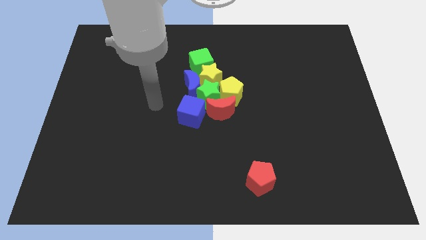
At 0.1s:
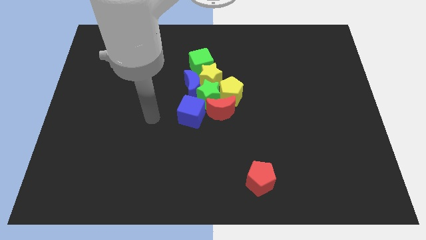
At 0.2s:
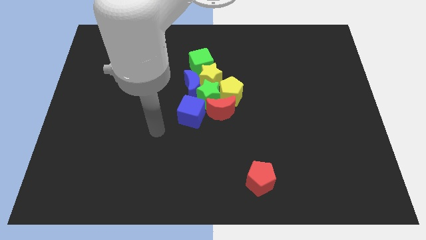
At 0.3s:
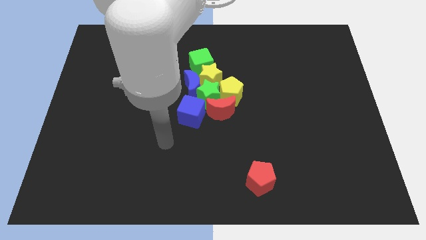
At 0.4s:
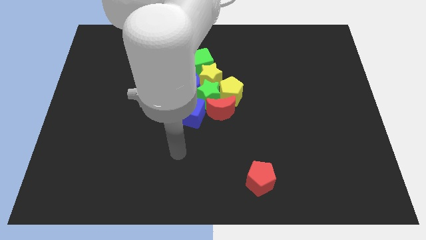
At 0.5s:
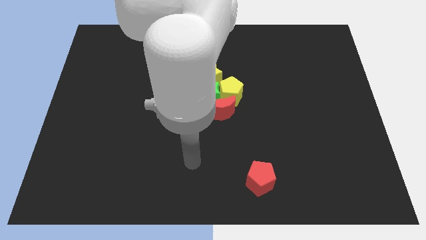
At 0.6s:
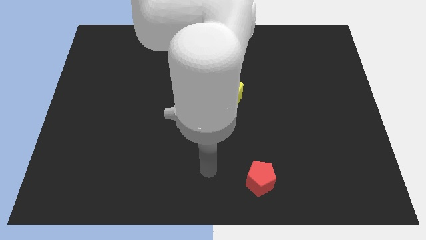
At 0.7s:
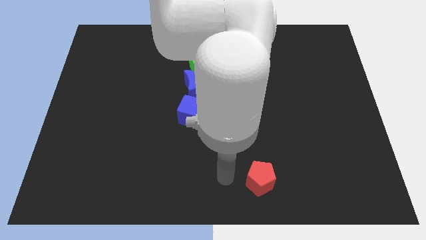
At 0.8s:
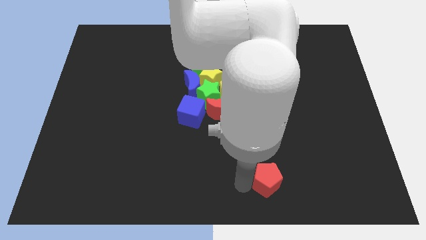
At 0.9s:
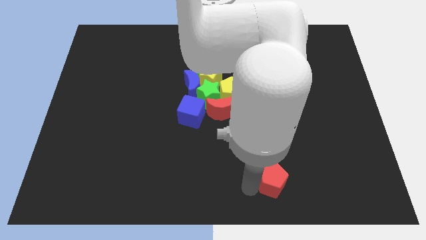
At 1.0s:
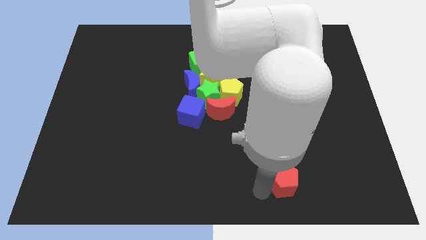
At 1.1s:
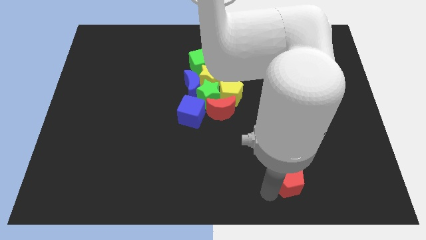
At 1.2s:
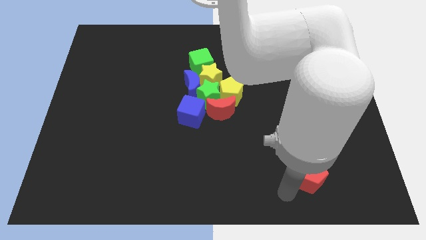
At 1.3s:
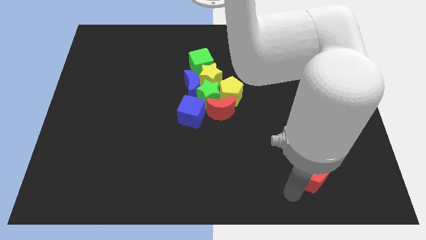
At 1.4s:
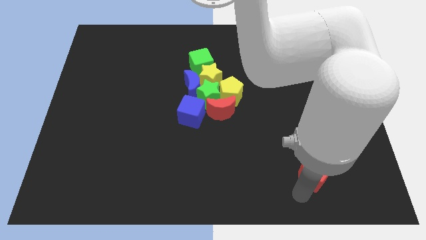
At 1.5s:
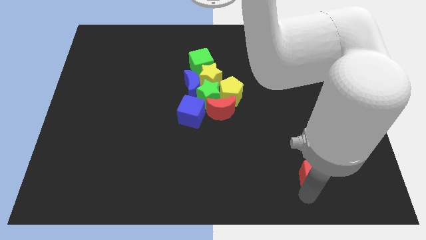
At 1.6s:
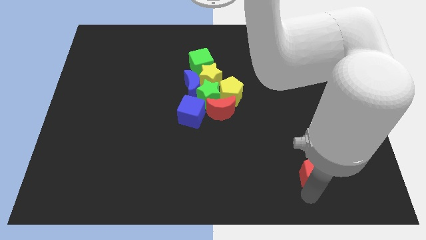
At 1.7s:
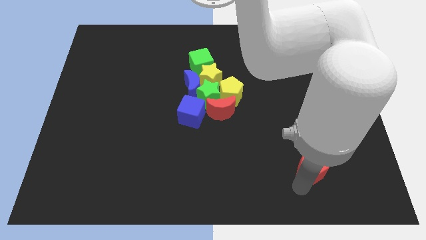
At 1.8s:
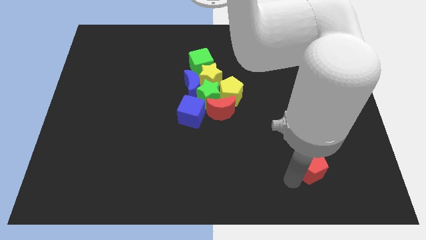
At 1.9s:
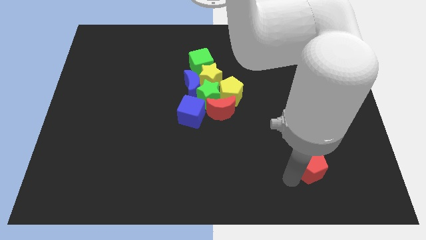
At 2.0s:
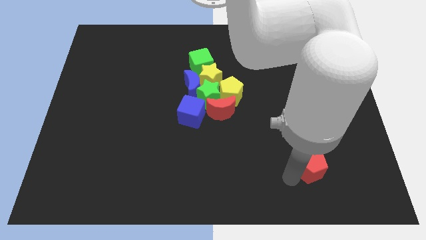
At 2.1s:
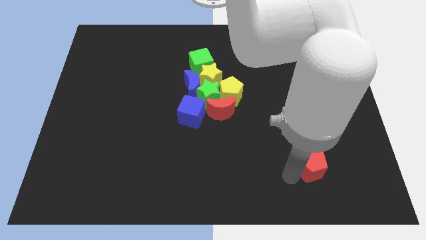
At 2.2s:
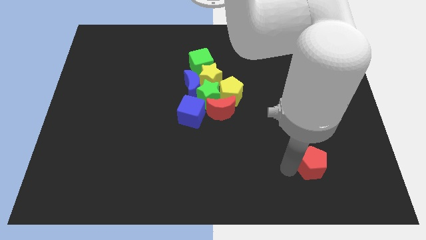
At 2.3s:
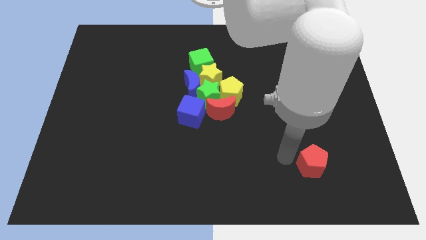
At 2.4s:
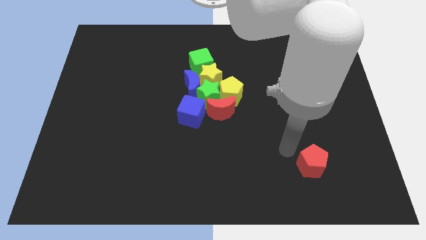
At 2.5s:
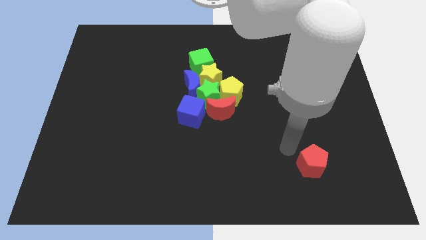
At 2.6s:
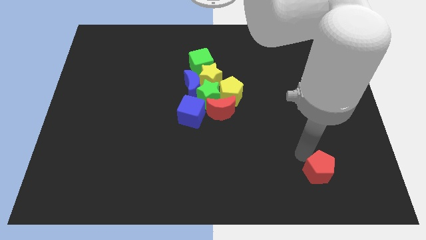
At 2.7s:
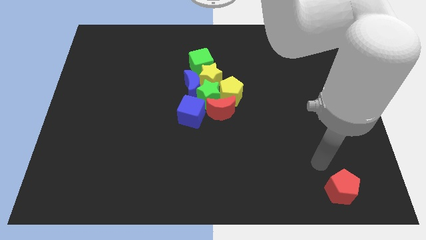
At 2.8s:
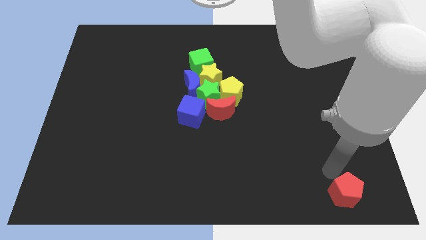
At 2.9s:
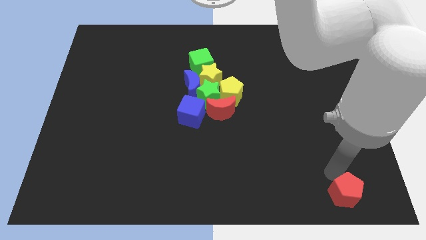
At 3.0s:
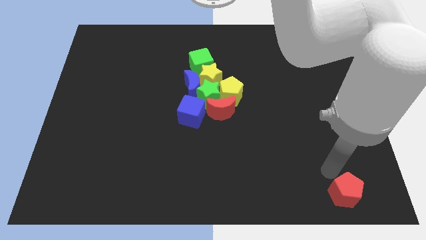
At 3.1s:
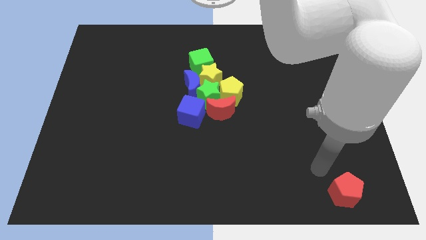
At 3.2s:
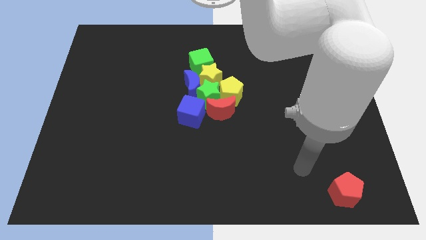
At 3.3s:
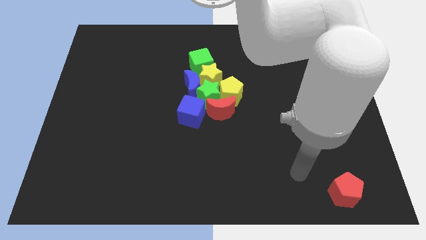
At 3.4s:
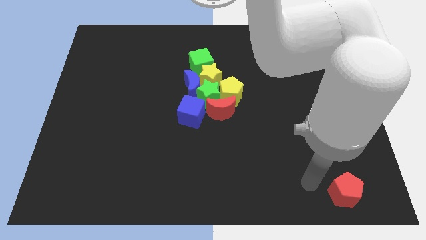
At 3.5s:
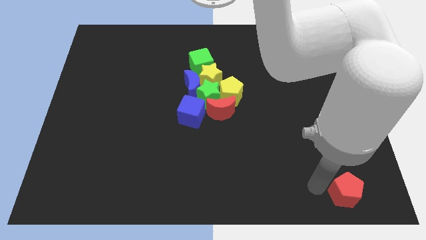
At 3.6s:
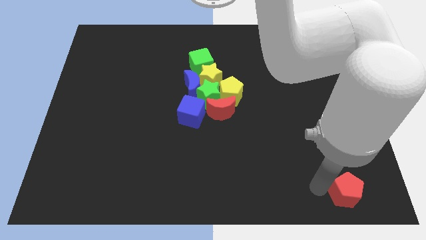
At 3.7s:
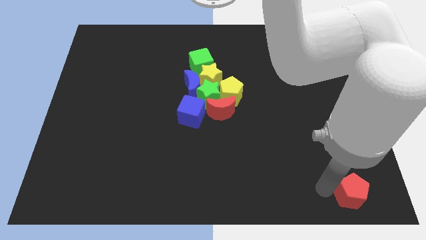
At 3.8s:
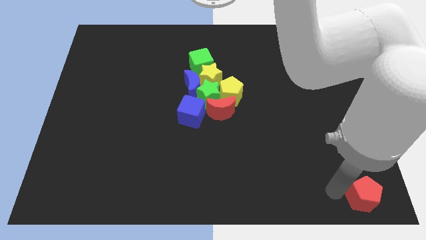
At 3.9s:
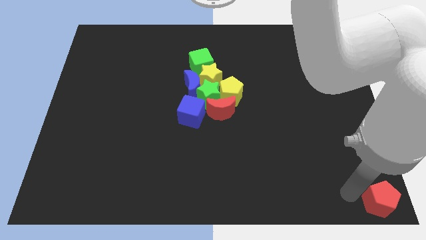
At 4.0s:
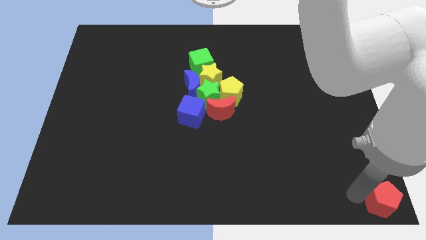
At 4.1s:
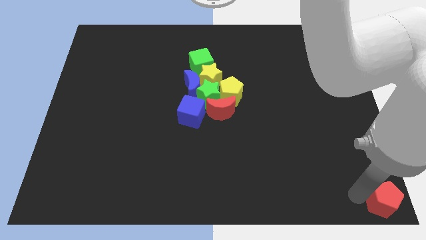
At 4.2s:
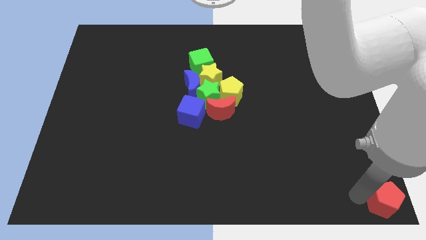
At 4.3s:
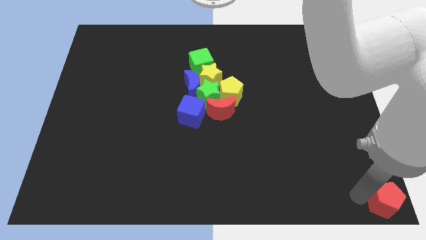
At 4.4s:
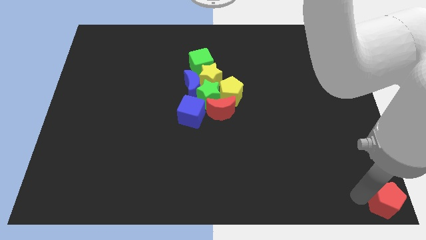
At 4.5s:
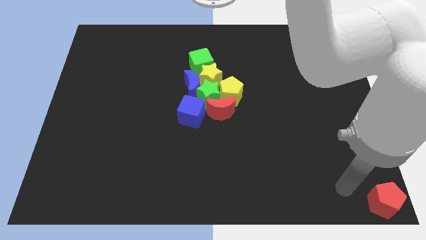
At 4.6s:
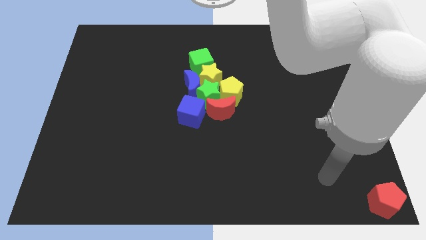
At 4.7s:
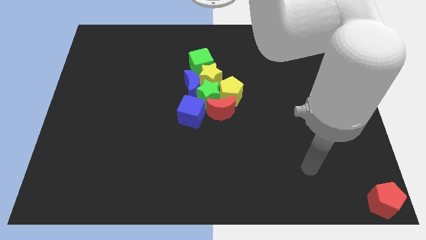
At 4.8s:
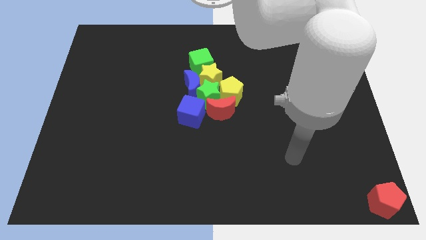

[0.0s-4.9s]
move red pentagon to the right bottom corner

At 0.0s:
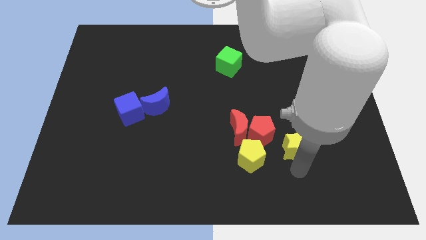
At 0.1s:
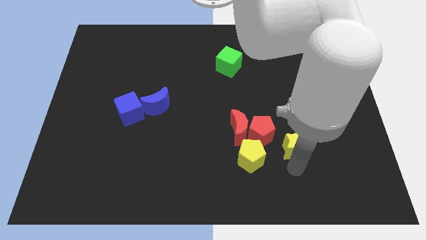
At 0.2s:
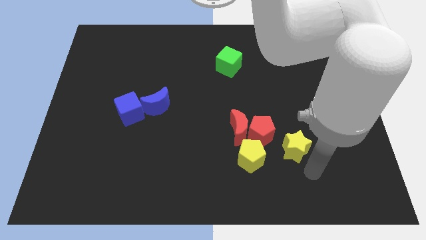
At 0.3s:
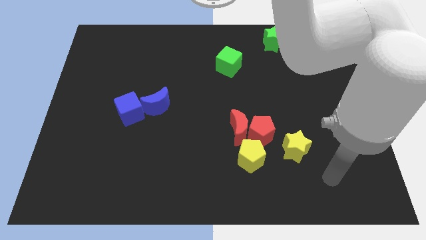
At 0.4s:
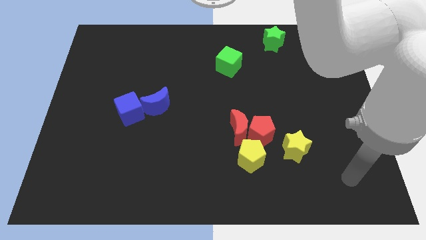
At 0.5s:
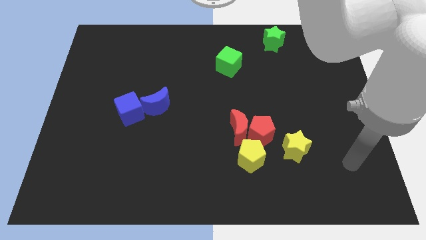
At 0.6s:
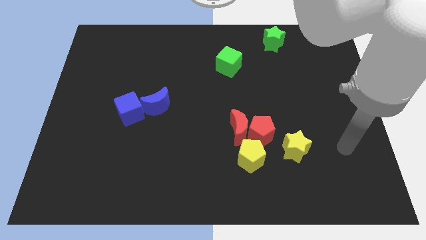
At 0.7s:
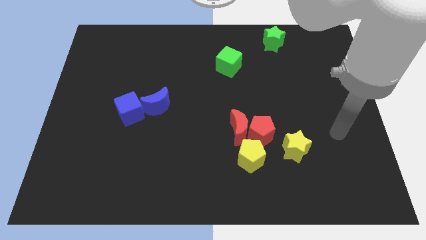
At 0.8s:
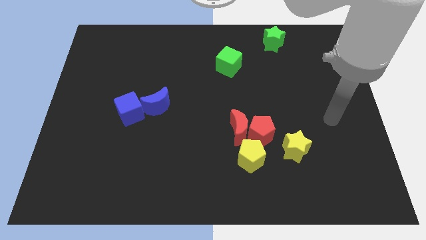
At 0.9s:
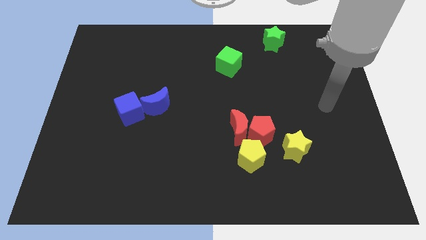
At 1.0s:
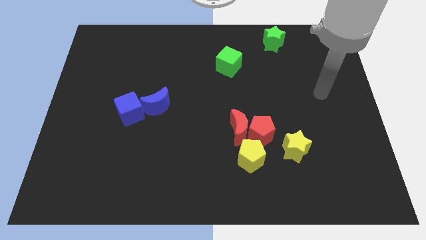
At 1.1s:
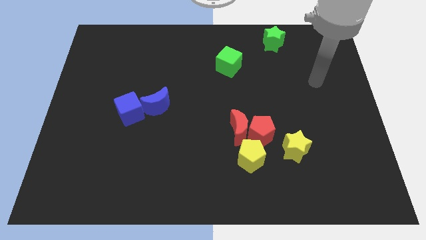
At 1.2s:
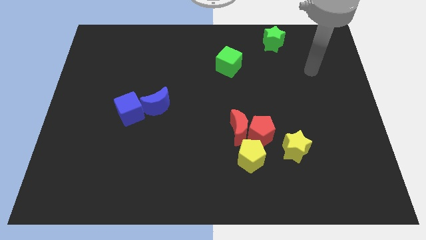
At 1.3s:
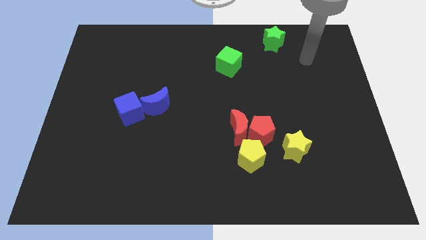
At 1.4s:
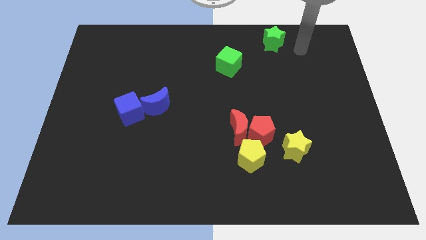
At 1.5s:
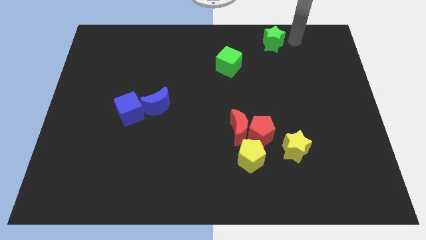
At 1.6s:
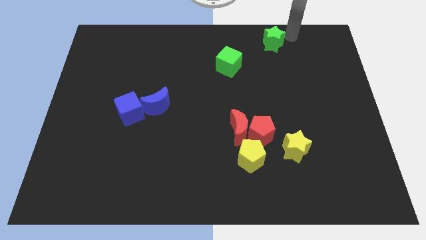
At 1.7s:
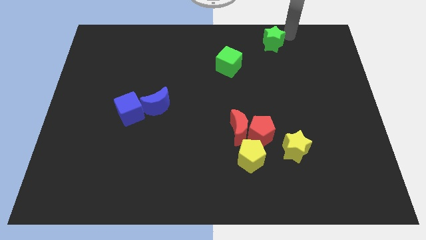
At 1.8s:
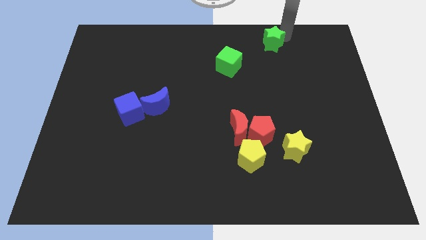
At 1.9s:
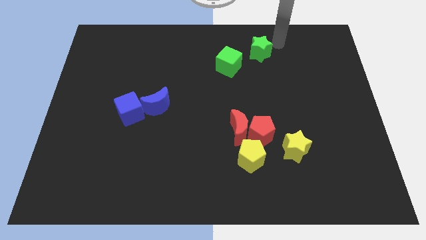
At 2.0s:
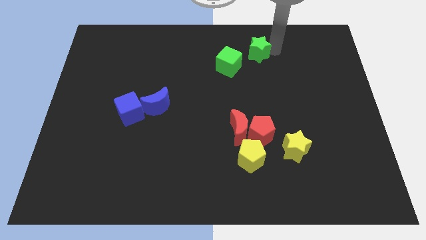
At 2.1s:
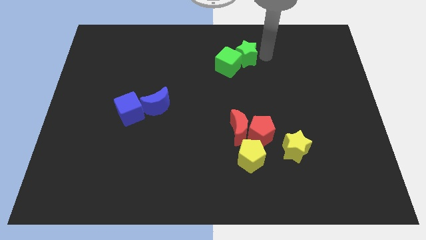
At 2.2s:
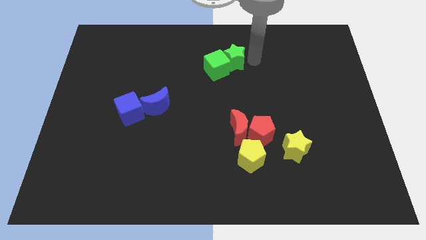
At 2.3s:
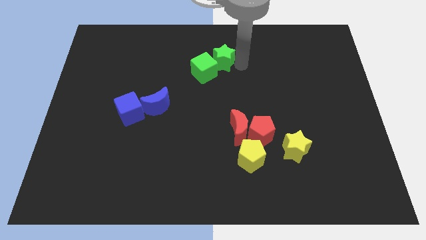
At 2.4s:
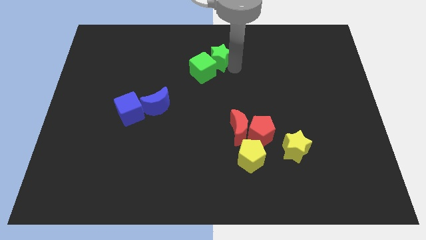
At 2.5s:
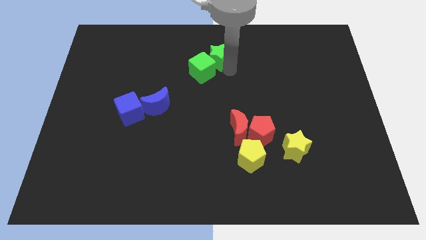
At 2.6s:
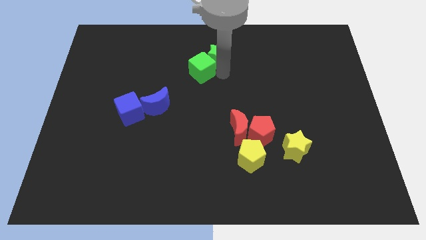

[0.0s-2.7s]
move the green star to the top right of the green cube

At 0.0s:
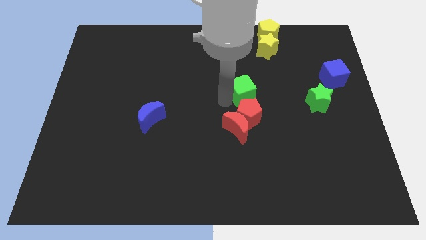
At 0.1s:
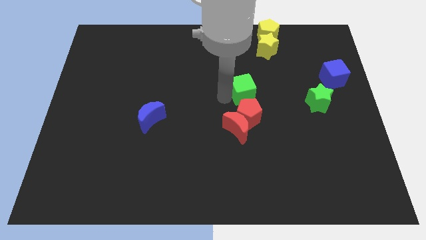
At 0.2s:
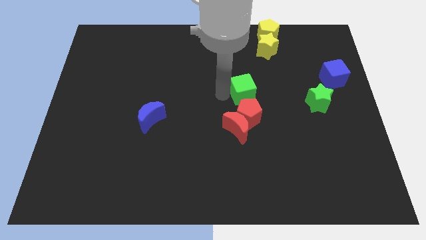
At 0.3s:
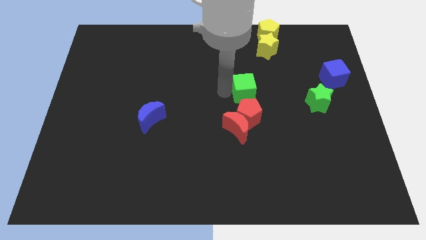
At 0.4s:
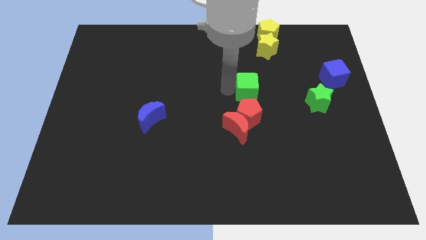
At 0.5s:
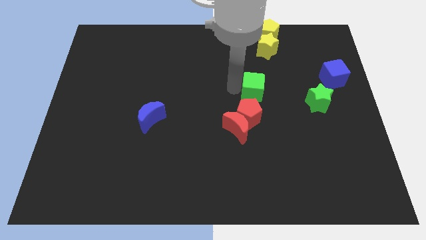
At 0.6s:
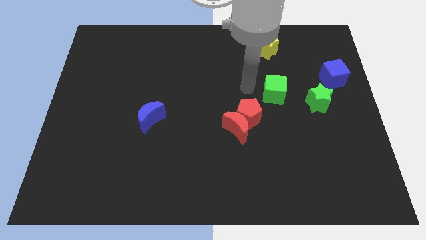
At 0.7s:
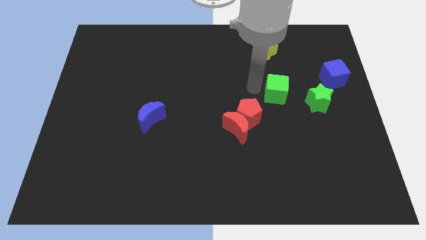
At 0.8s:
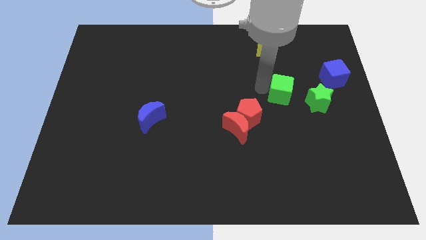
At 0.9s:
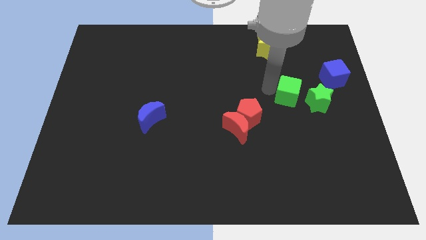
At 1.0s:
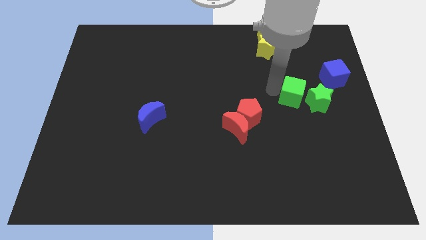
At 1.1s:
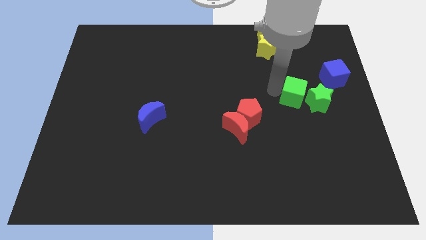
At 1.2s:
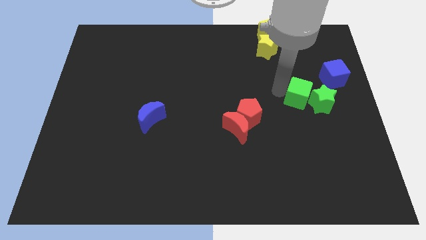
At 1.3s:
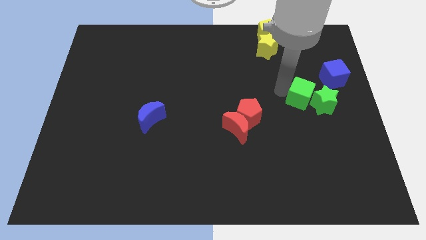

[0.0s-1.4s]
push the green cube into the green star
